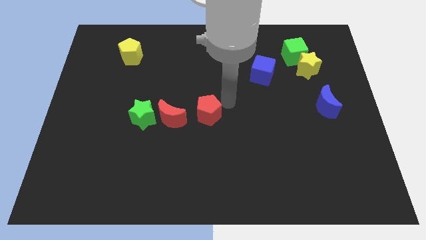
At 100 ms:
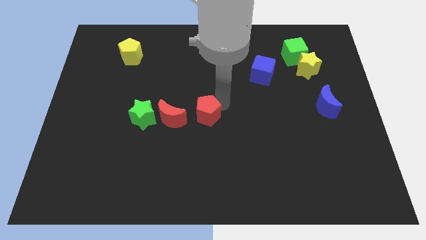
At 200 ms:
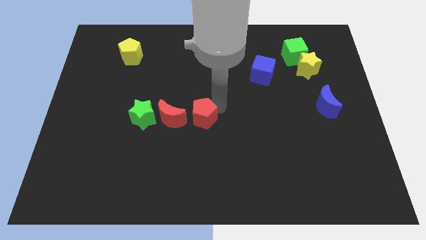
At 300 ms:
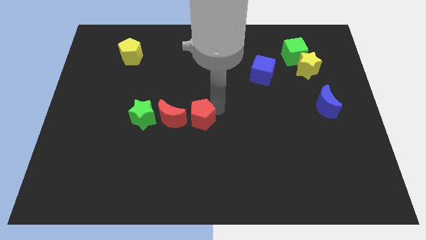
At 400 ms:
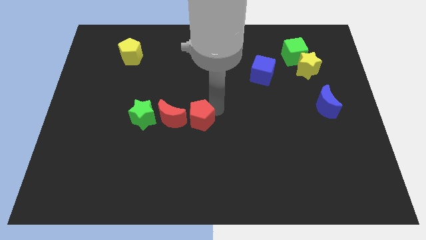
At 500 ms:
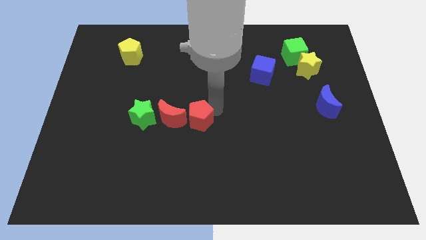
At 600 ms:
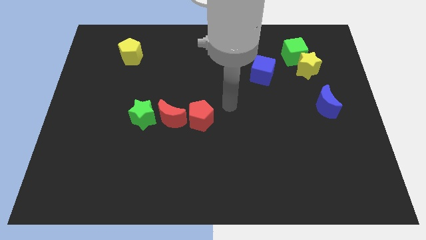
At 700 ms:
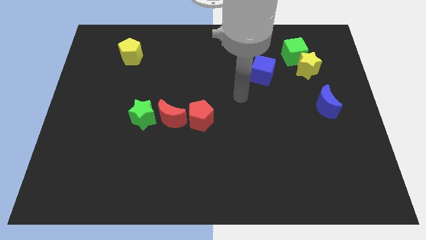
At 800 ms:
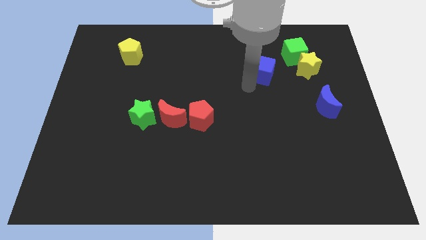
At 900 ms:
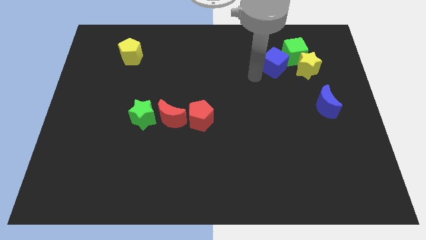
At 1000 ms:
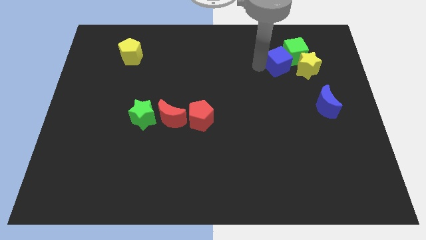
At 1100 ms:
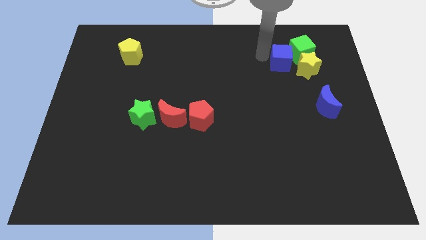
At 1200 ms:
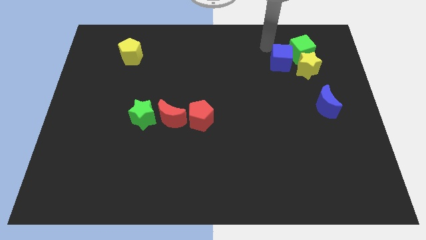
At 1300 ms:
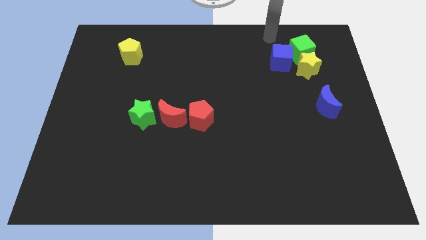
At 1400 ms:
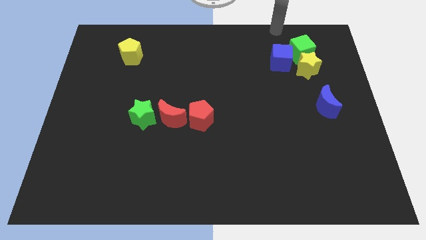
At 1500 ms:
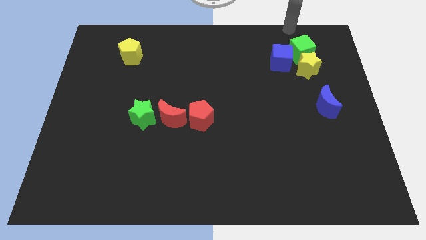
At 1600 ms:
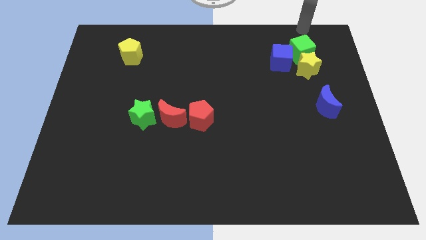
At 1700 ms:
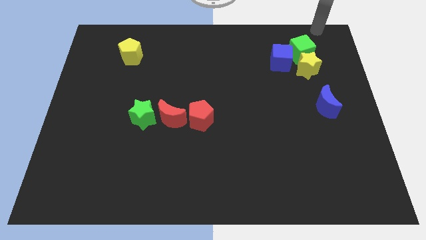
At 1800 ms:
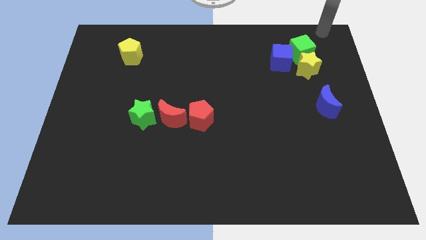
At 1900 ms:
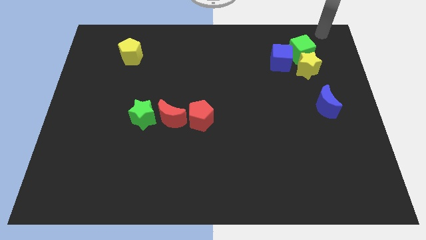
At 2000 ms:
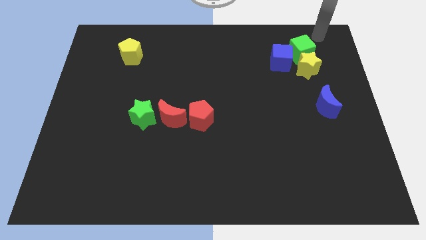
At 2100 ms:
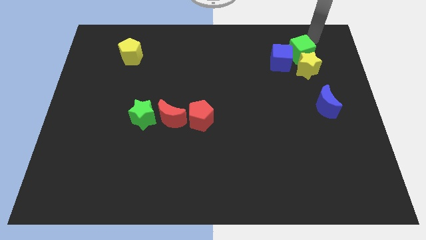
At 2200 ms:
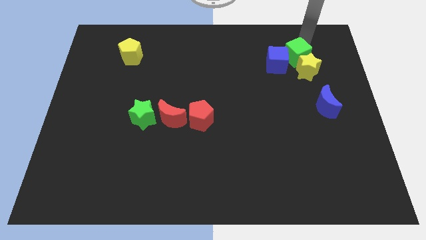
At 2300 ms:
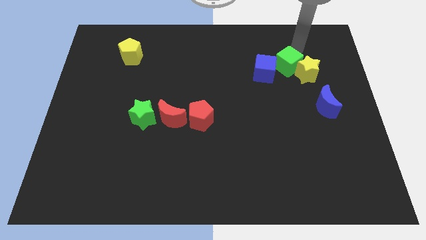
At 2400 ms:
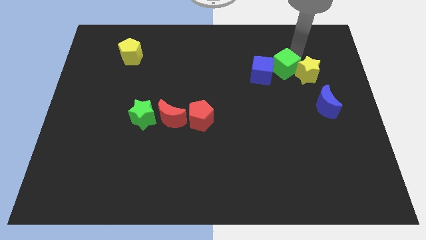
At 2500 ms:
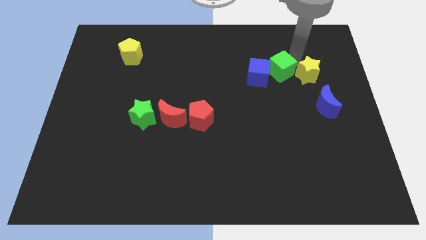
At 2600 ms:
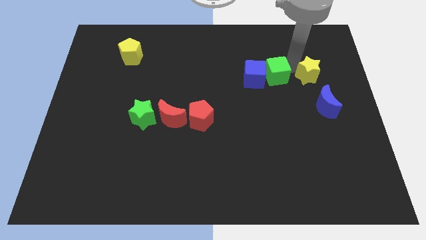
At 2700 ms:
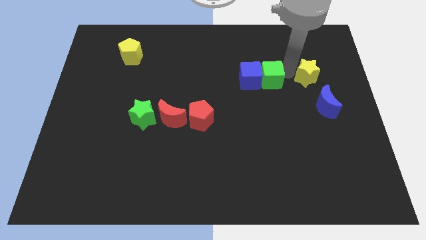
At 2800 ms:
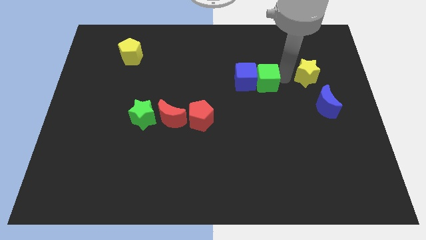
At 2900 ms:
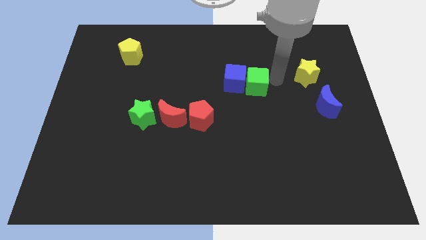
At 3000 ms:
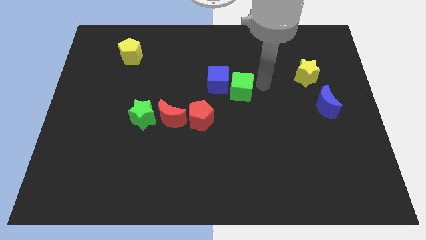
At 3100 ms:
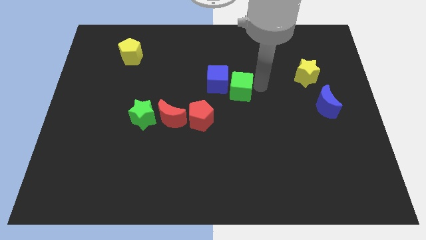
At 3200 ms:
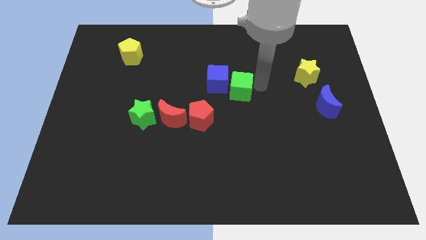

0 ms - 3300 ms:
push green cube to the center

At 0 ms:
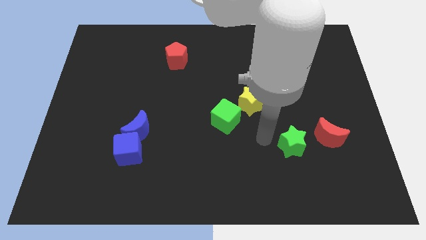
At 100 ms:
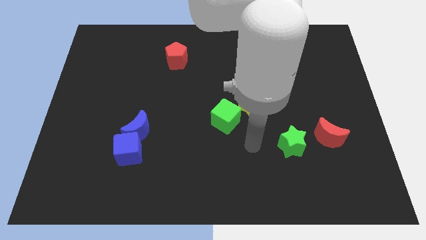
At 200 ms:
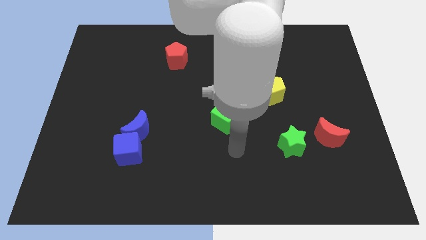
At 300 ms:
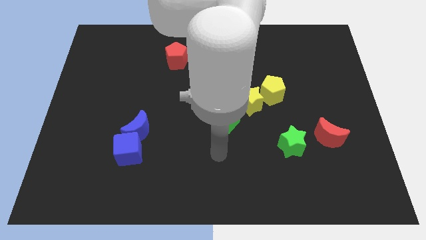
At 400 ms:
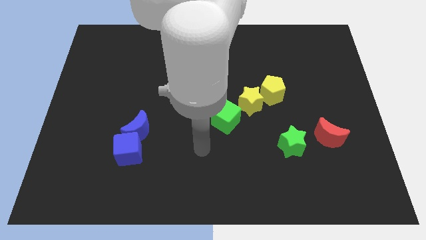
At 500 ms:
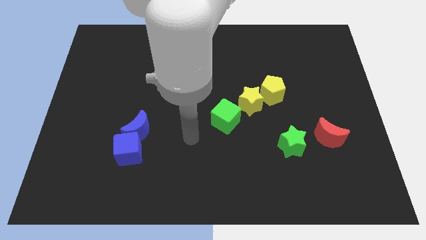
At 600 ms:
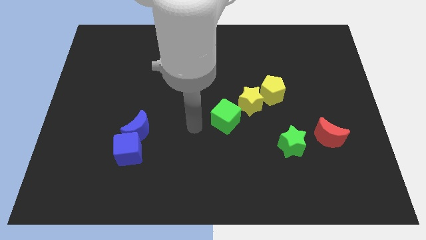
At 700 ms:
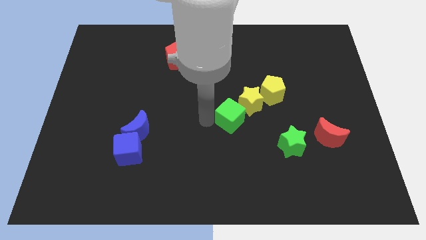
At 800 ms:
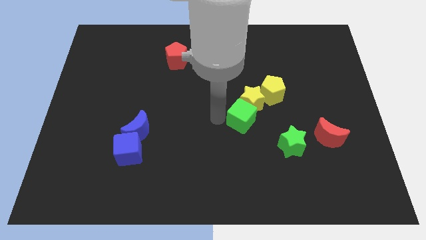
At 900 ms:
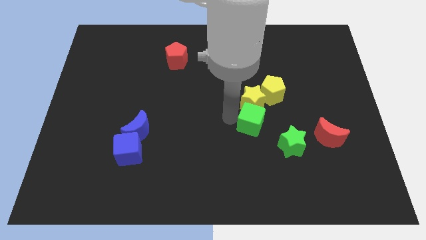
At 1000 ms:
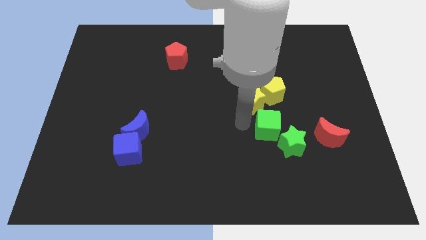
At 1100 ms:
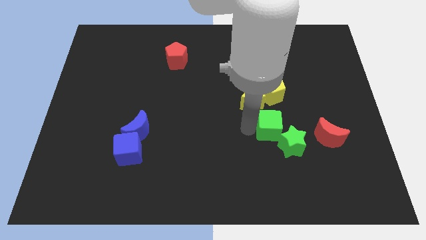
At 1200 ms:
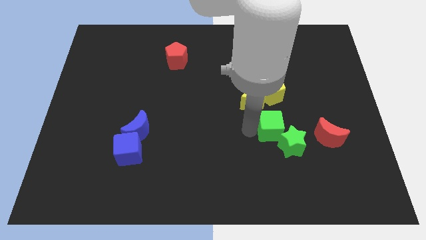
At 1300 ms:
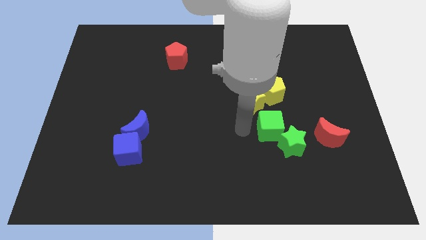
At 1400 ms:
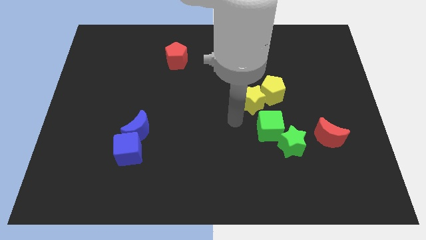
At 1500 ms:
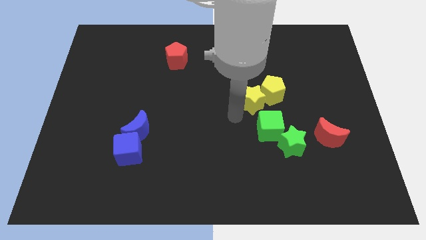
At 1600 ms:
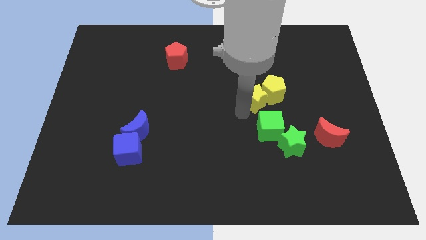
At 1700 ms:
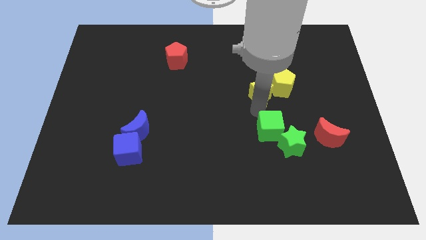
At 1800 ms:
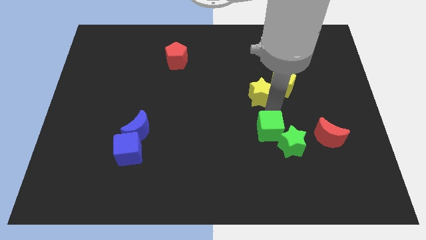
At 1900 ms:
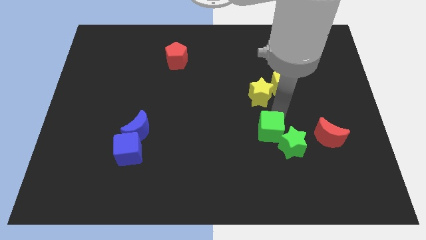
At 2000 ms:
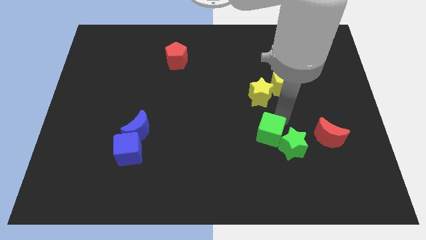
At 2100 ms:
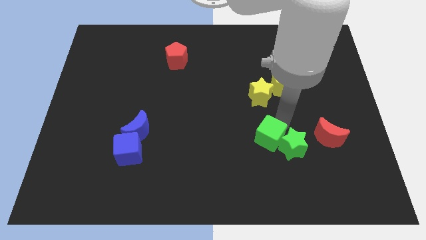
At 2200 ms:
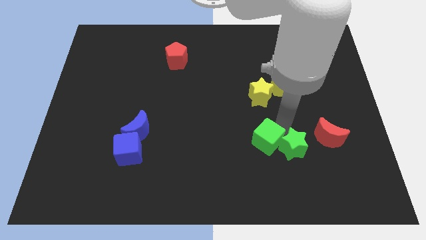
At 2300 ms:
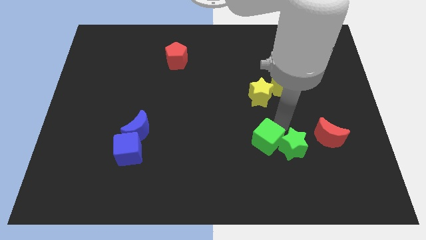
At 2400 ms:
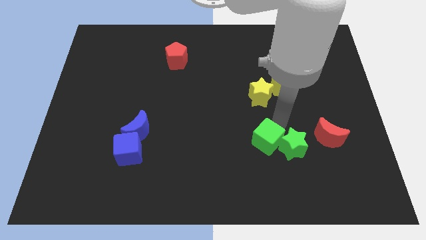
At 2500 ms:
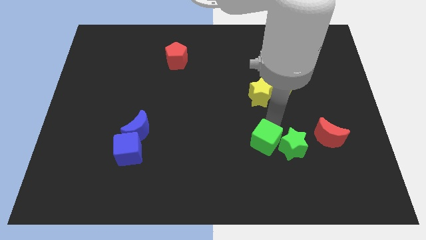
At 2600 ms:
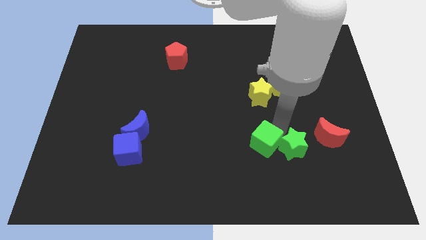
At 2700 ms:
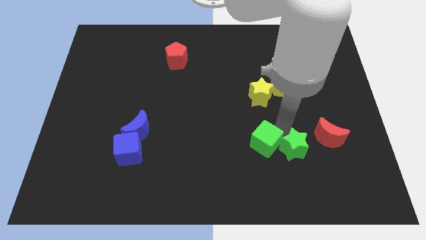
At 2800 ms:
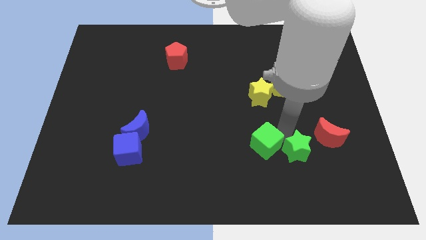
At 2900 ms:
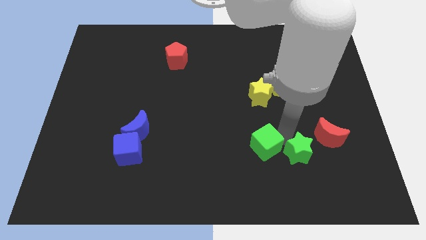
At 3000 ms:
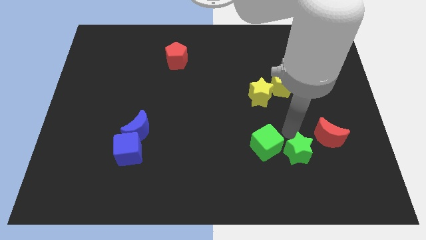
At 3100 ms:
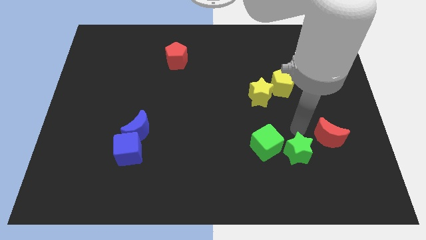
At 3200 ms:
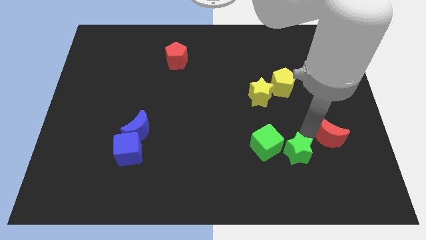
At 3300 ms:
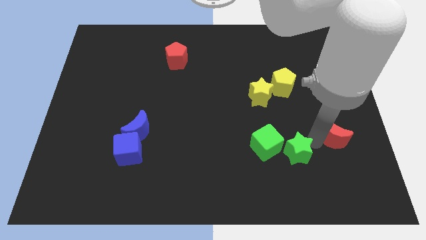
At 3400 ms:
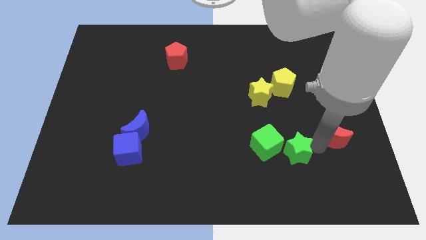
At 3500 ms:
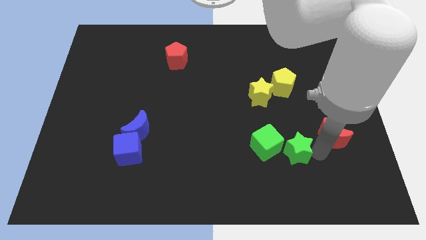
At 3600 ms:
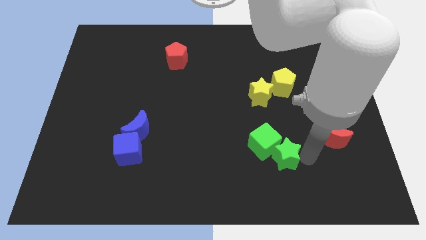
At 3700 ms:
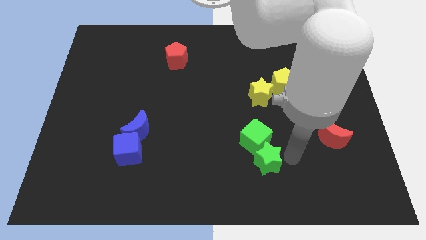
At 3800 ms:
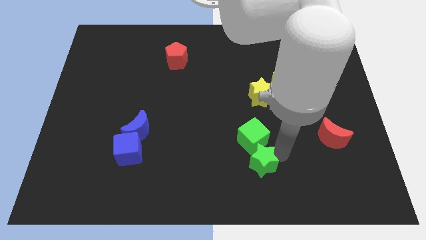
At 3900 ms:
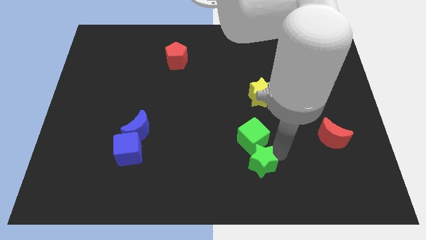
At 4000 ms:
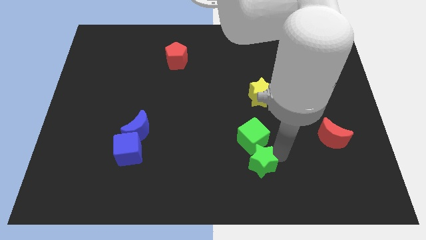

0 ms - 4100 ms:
put the green blocks horizontally right to the blue blocks

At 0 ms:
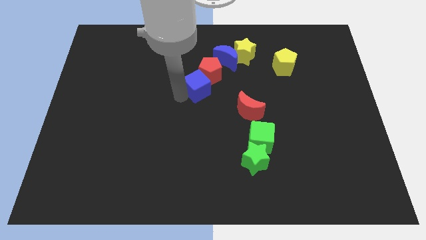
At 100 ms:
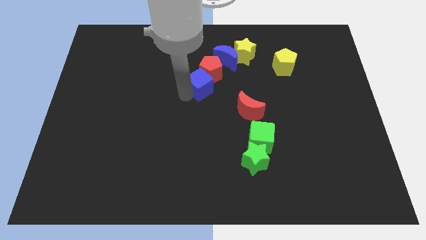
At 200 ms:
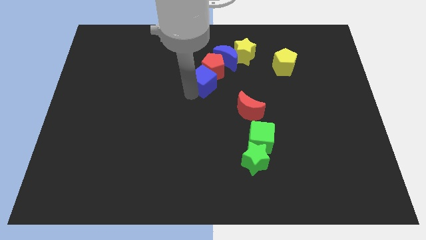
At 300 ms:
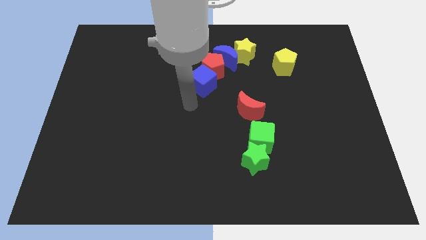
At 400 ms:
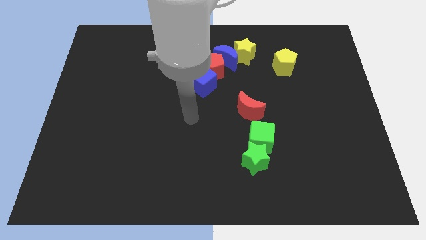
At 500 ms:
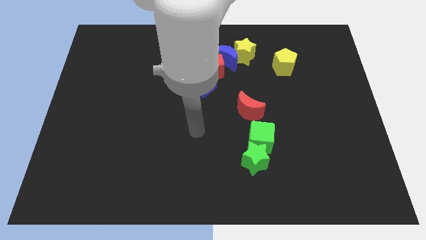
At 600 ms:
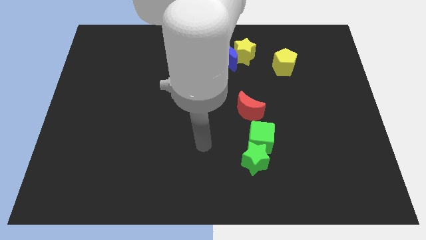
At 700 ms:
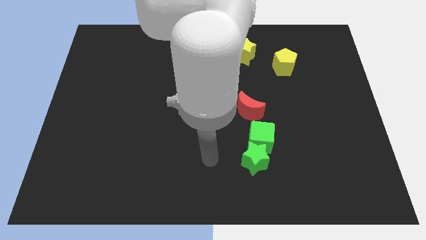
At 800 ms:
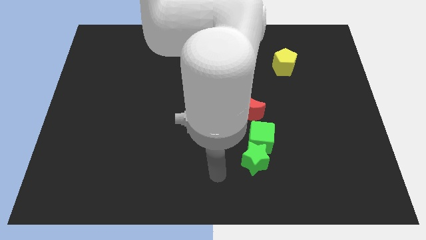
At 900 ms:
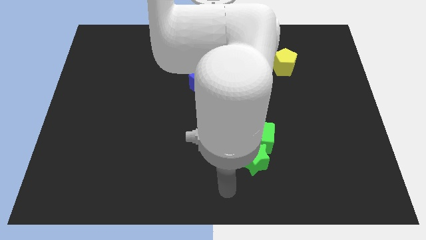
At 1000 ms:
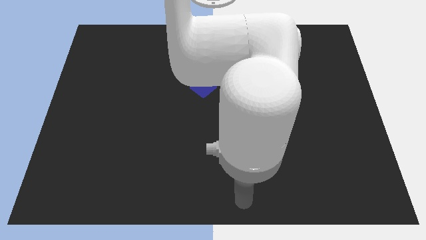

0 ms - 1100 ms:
move your arm away from blue cube

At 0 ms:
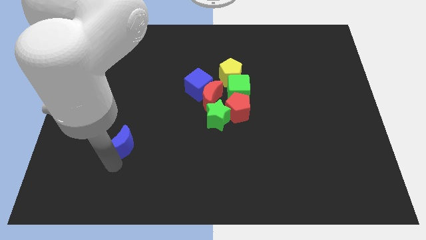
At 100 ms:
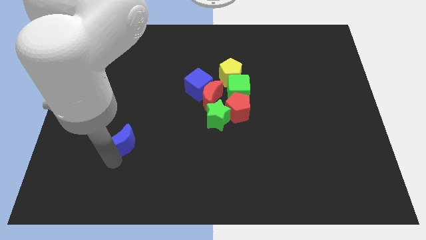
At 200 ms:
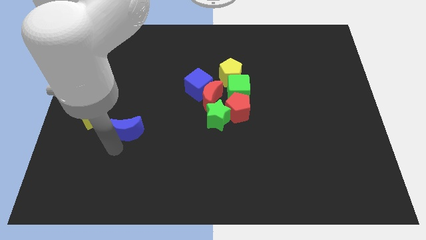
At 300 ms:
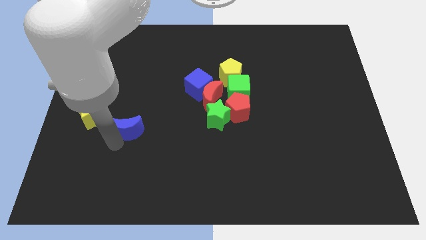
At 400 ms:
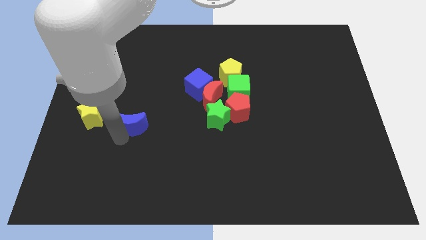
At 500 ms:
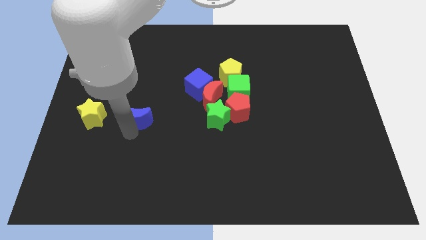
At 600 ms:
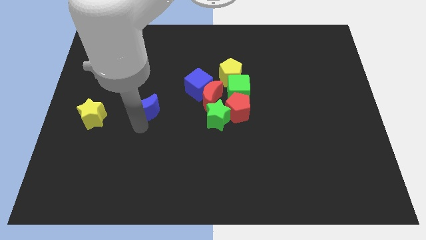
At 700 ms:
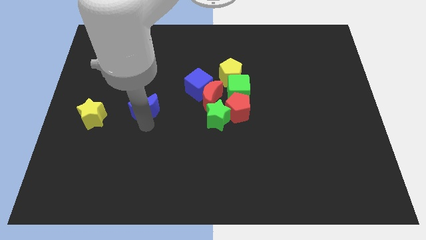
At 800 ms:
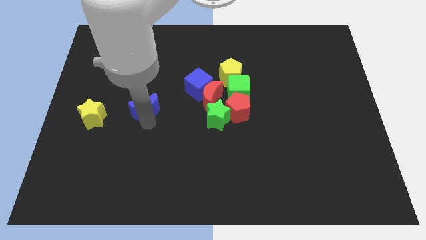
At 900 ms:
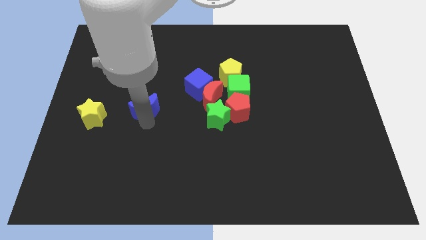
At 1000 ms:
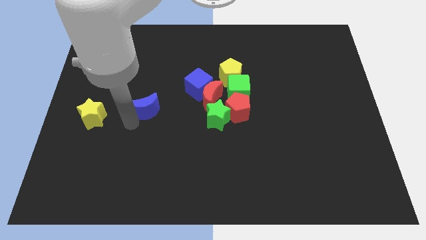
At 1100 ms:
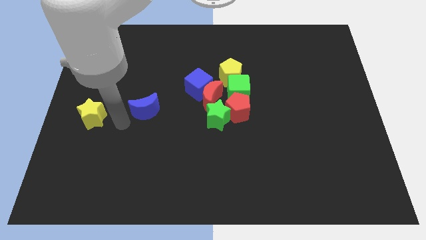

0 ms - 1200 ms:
push blue moon towards middle left of the board
